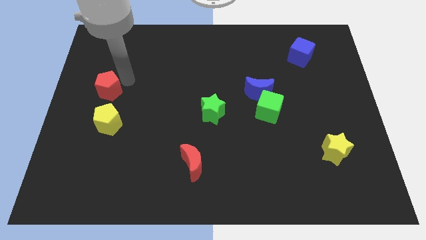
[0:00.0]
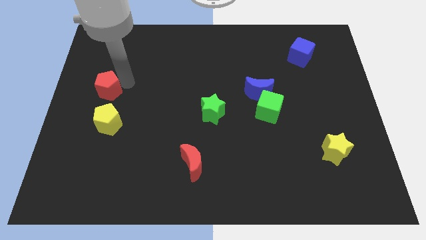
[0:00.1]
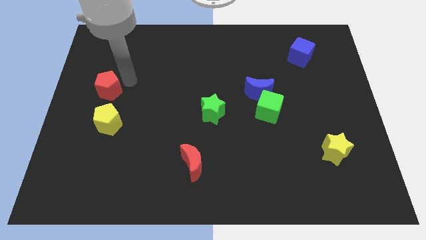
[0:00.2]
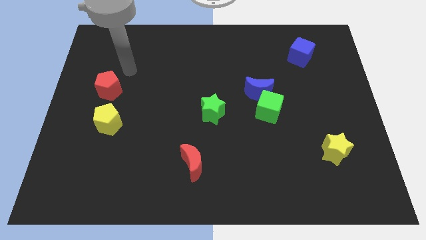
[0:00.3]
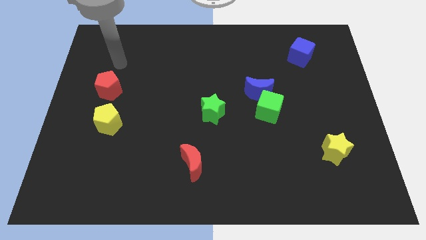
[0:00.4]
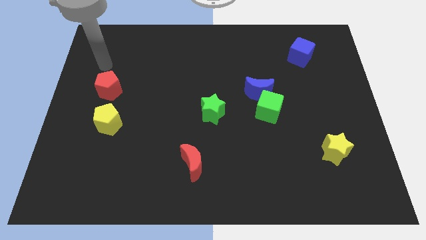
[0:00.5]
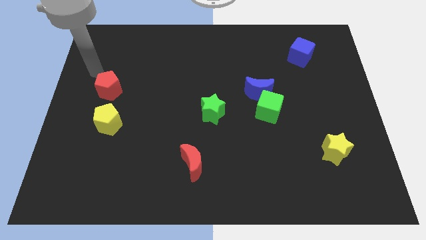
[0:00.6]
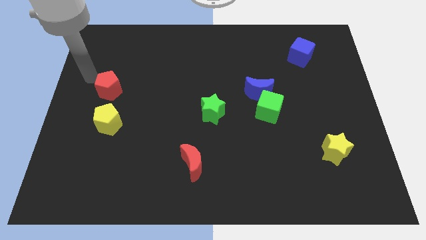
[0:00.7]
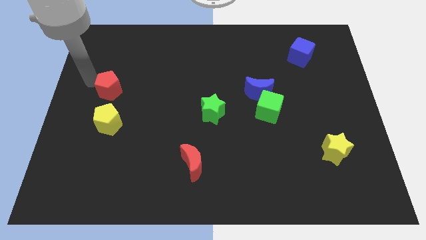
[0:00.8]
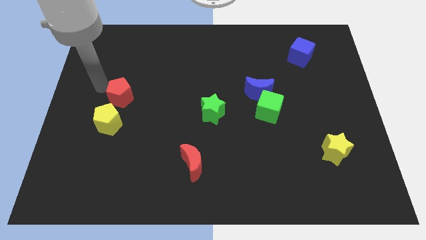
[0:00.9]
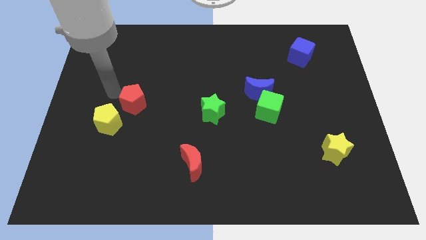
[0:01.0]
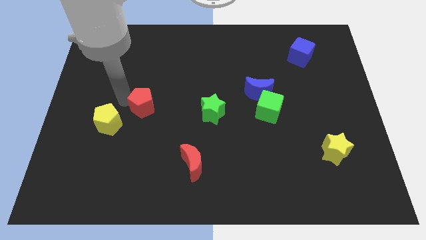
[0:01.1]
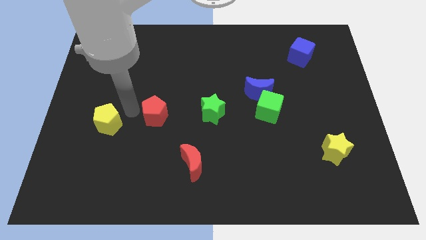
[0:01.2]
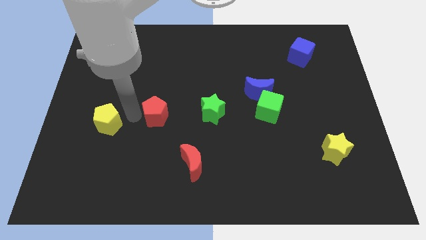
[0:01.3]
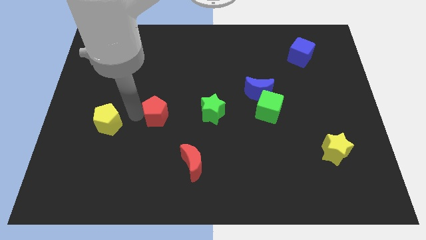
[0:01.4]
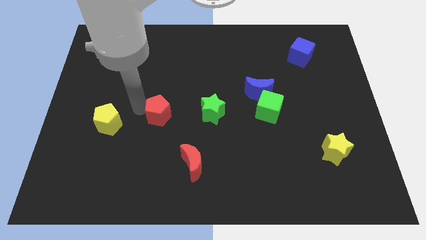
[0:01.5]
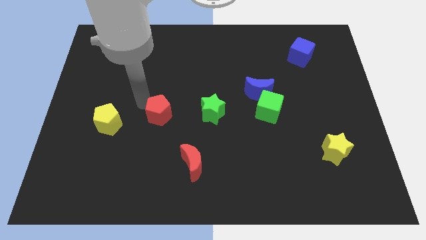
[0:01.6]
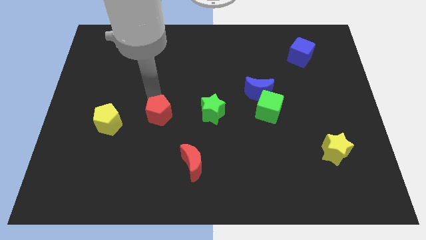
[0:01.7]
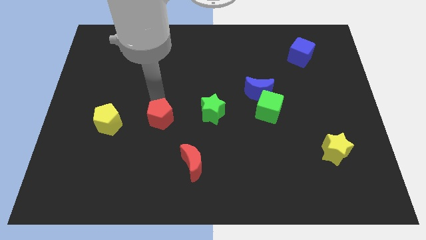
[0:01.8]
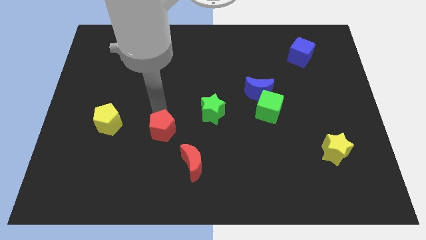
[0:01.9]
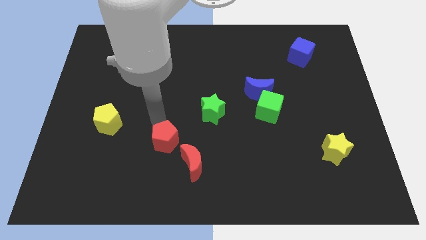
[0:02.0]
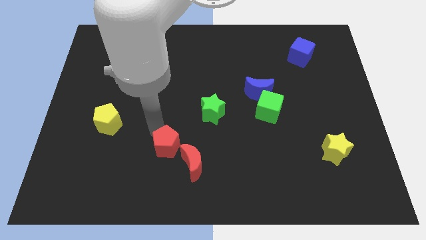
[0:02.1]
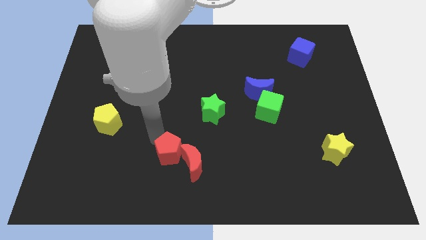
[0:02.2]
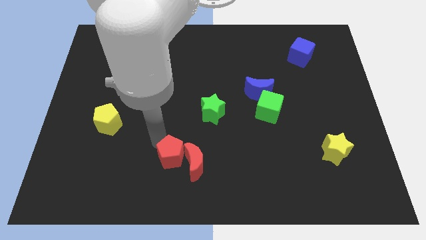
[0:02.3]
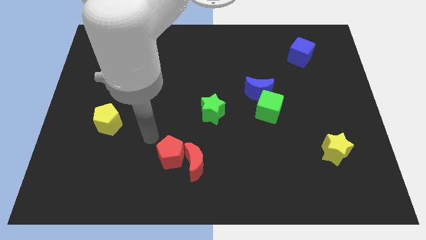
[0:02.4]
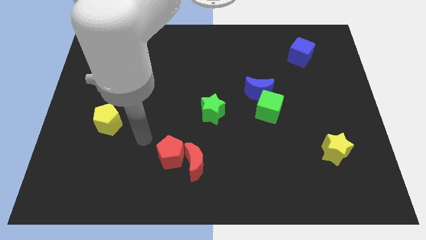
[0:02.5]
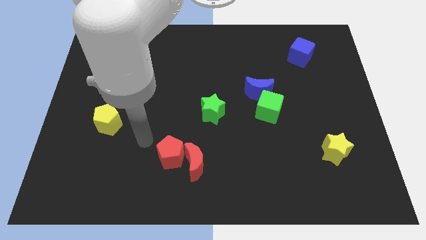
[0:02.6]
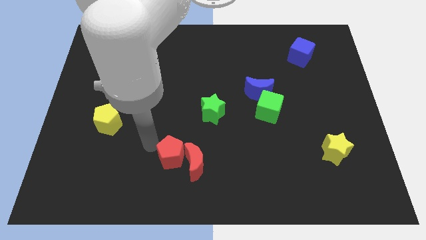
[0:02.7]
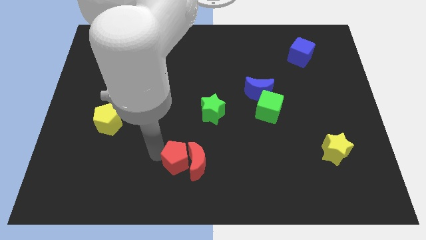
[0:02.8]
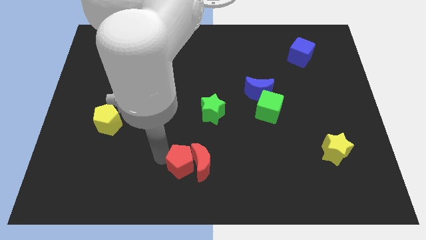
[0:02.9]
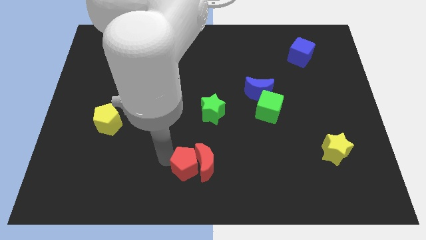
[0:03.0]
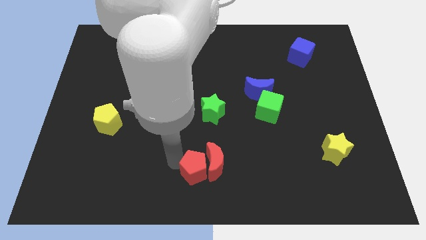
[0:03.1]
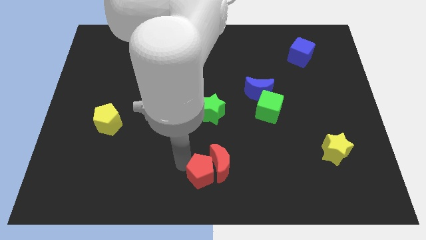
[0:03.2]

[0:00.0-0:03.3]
push the red pentagon to the left of the red crescent

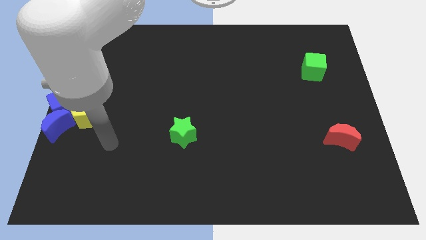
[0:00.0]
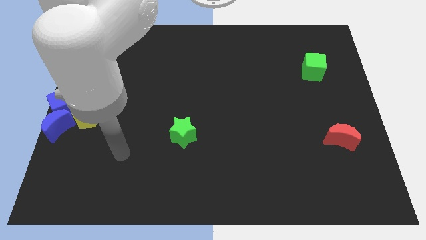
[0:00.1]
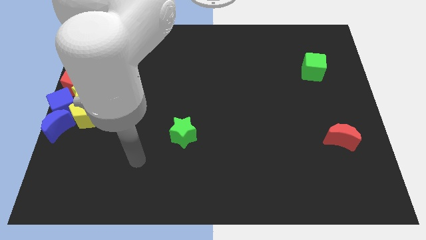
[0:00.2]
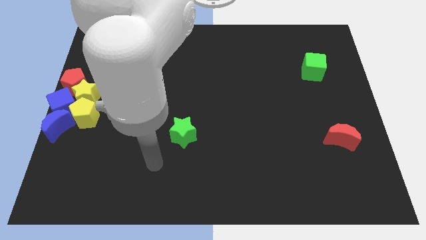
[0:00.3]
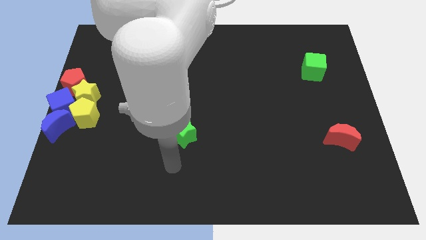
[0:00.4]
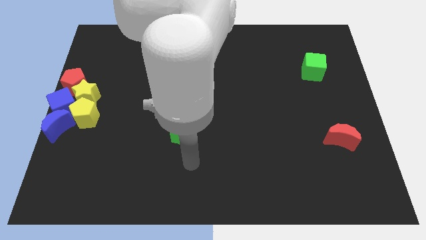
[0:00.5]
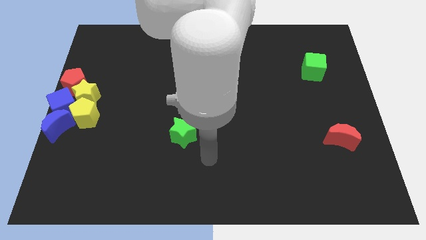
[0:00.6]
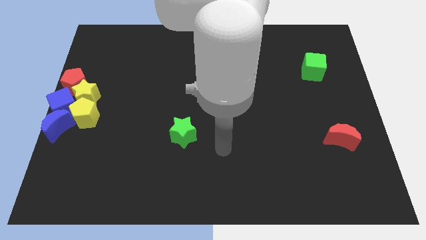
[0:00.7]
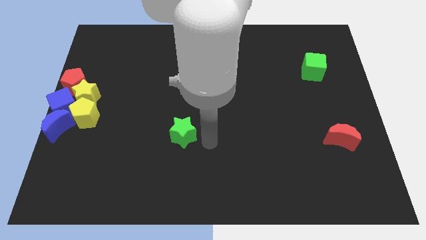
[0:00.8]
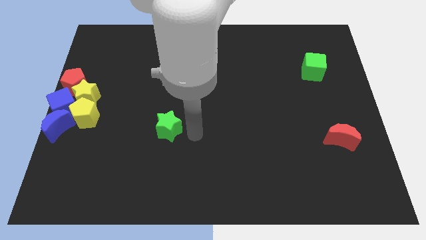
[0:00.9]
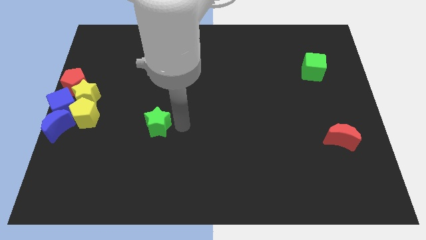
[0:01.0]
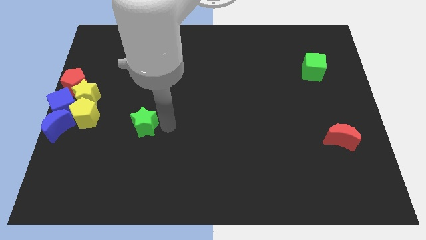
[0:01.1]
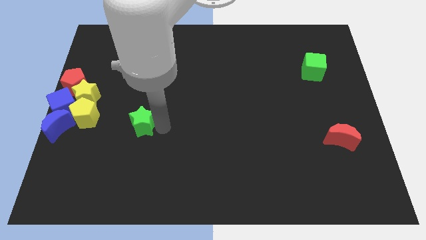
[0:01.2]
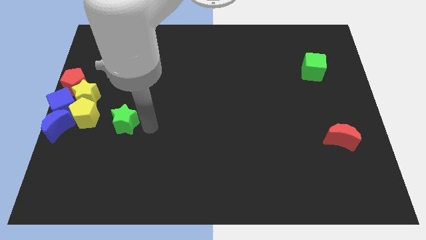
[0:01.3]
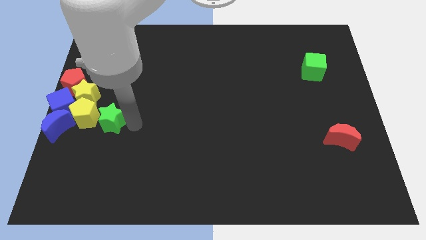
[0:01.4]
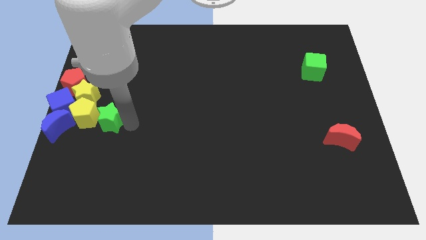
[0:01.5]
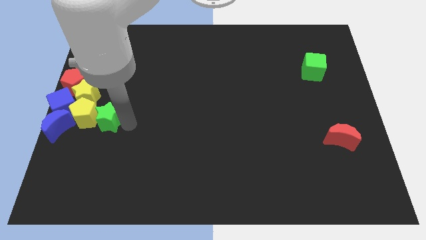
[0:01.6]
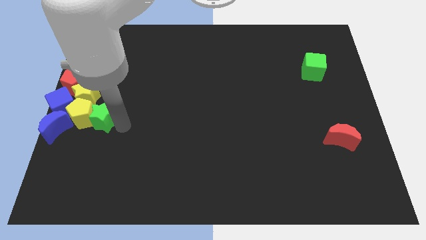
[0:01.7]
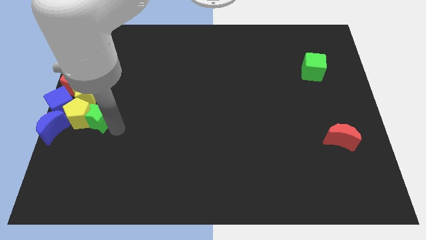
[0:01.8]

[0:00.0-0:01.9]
push the green star into the right side of the yellow pentagon

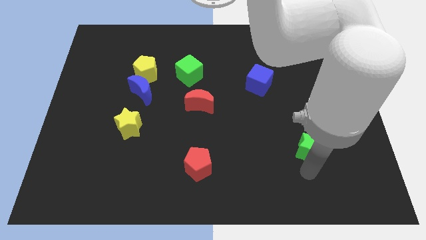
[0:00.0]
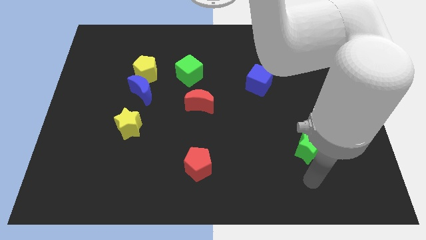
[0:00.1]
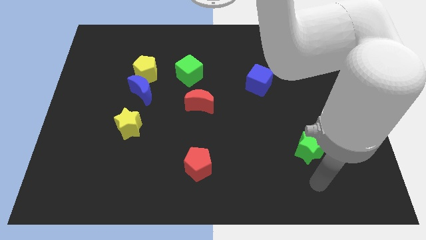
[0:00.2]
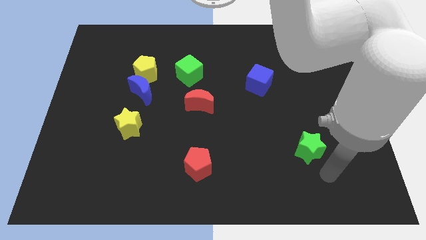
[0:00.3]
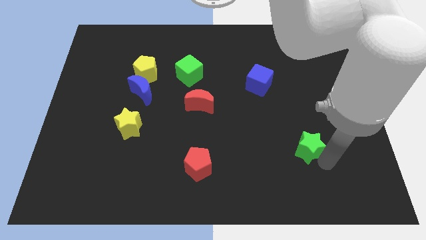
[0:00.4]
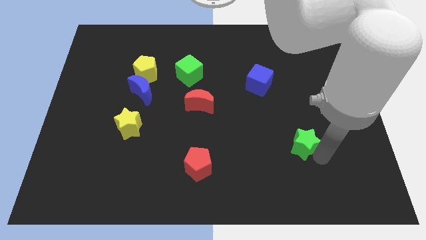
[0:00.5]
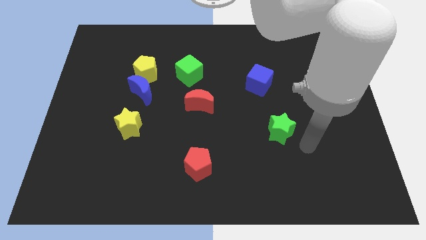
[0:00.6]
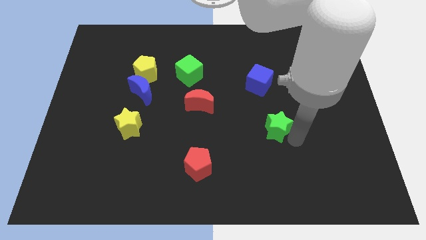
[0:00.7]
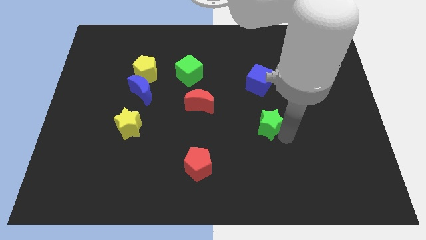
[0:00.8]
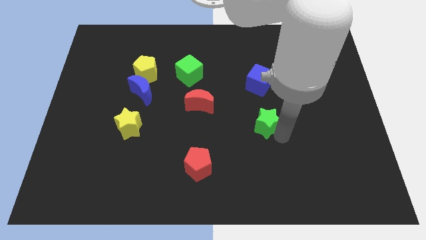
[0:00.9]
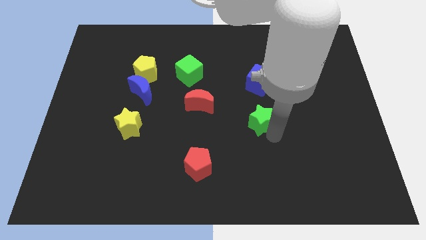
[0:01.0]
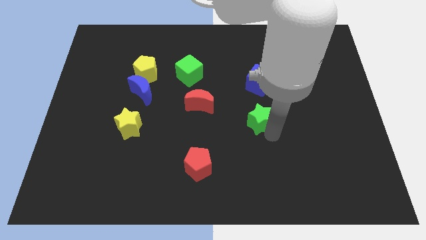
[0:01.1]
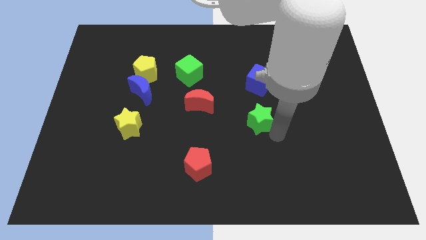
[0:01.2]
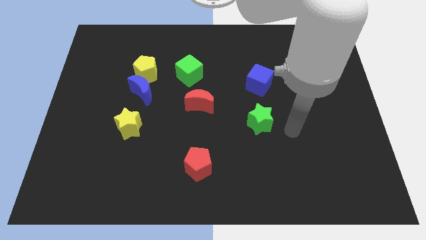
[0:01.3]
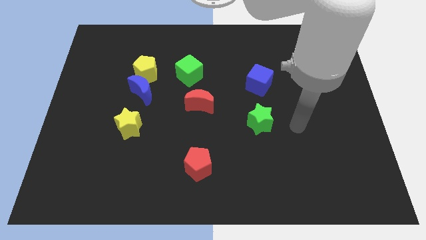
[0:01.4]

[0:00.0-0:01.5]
place the green star below the blue cube

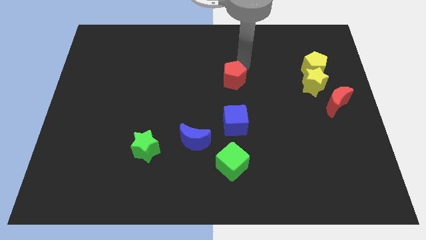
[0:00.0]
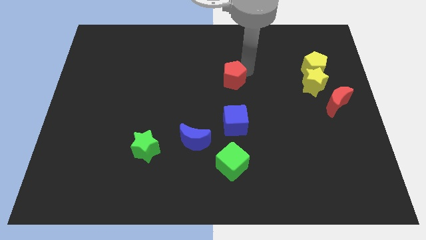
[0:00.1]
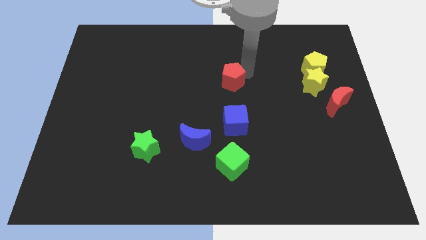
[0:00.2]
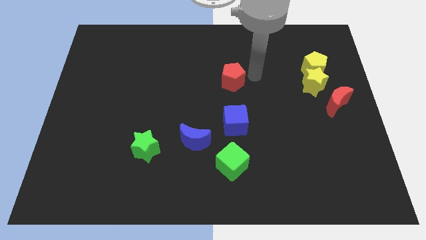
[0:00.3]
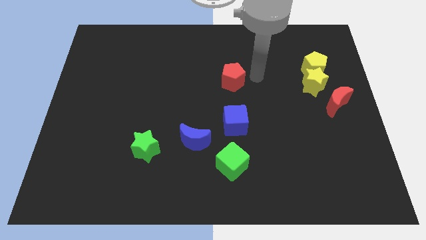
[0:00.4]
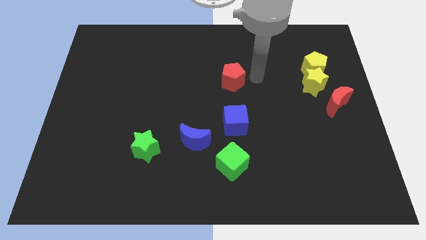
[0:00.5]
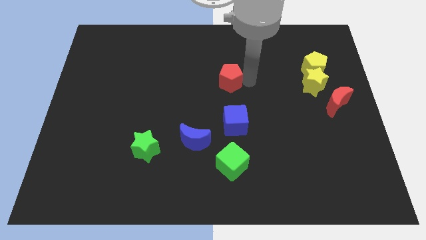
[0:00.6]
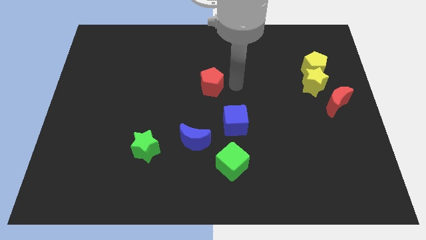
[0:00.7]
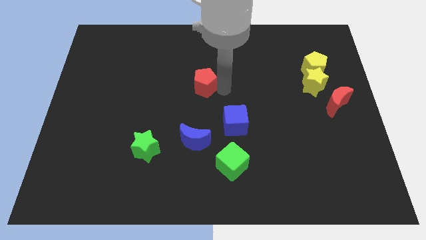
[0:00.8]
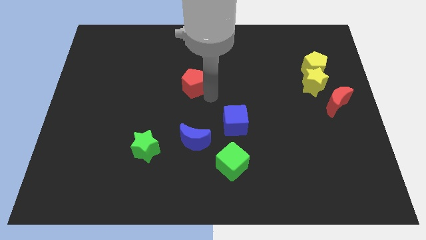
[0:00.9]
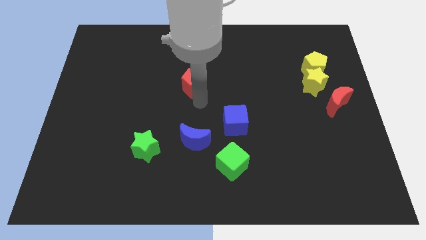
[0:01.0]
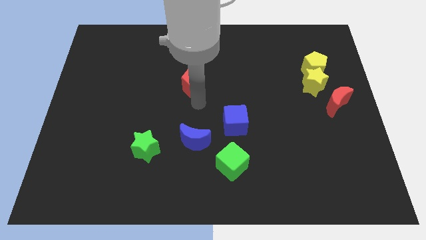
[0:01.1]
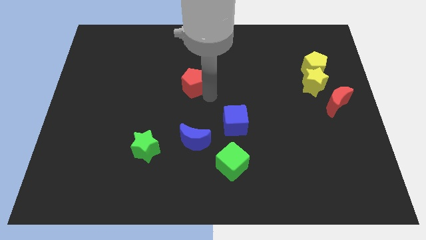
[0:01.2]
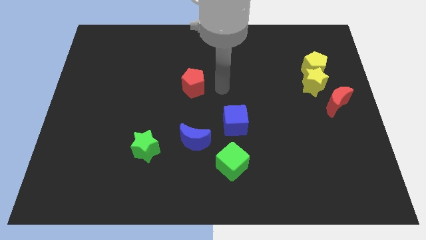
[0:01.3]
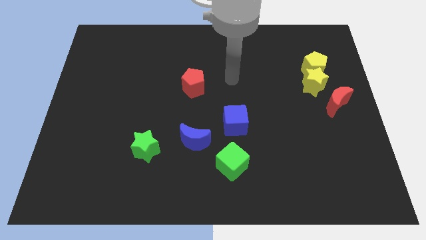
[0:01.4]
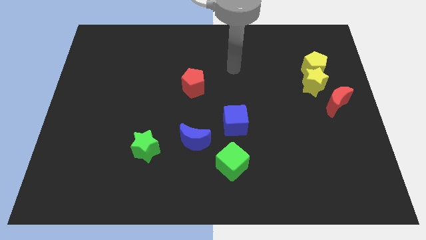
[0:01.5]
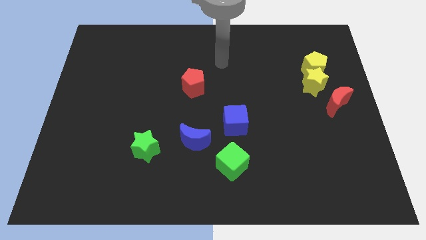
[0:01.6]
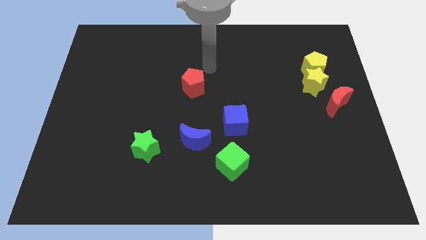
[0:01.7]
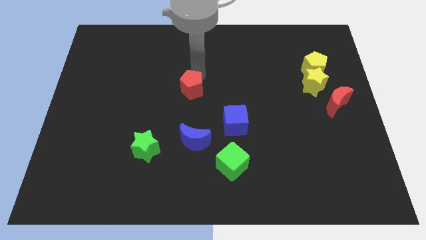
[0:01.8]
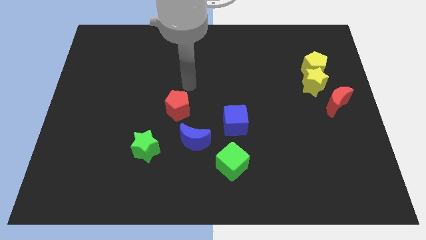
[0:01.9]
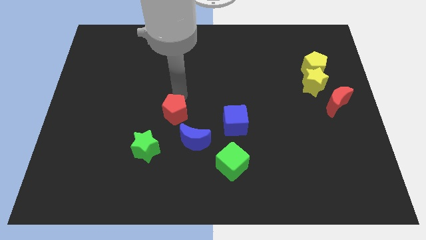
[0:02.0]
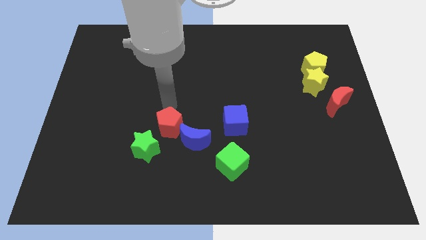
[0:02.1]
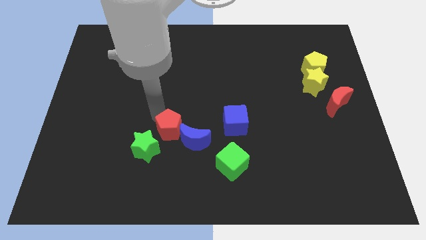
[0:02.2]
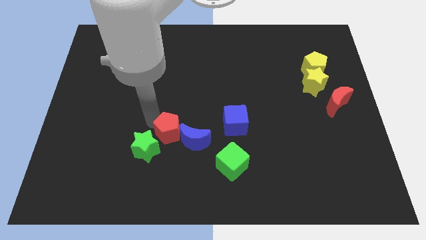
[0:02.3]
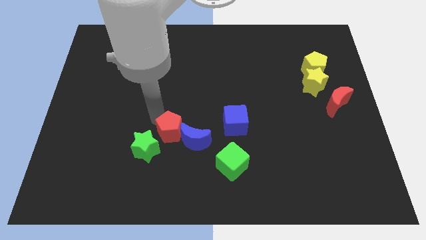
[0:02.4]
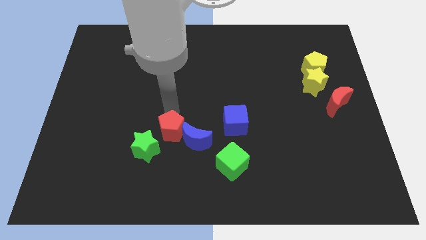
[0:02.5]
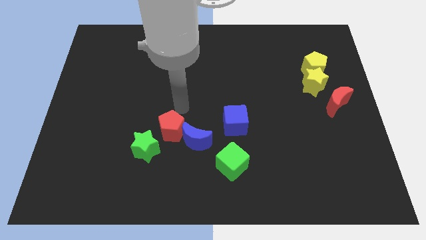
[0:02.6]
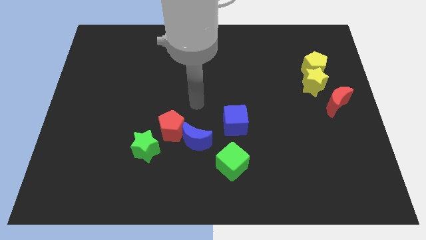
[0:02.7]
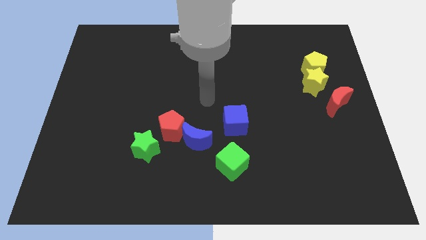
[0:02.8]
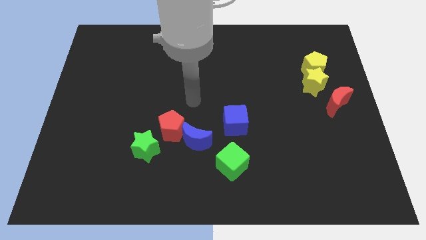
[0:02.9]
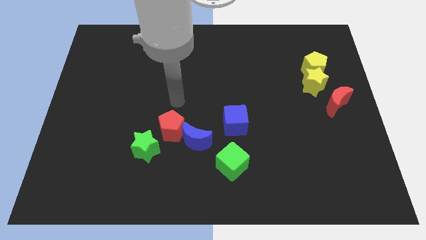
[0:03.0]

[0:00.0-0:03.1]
place red pentagon to the left of blue cube
